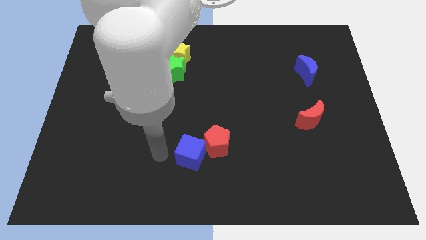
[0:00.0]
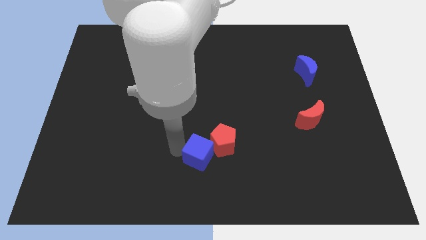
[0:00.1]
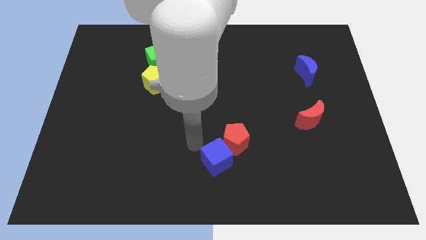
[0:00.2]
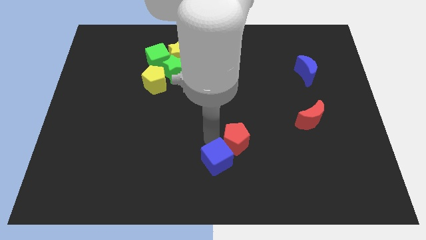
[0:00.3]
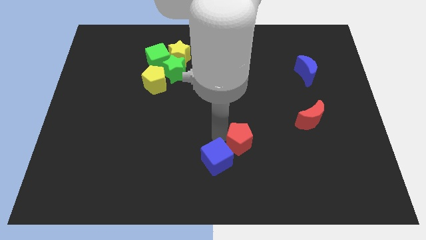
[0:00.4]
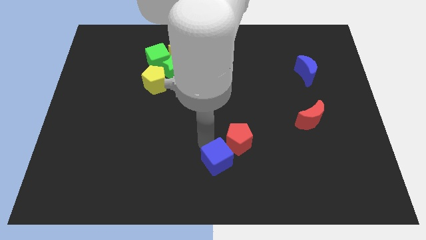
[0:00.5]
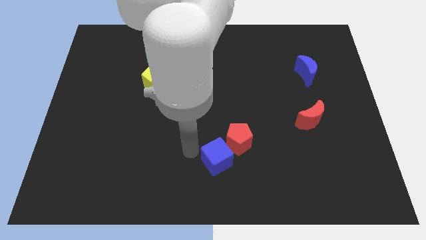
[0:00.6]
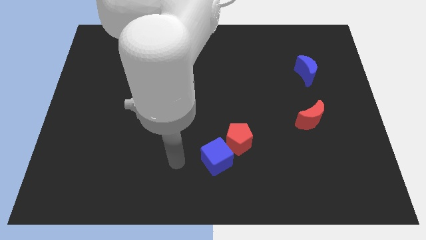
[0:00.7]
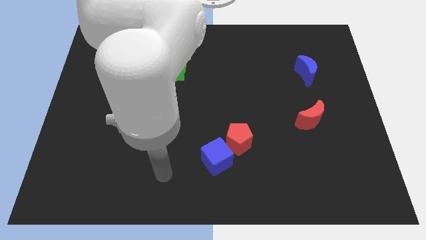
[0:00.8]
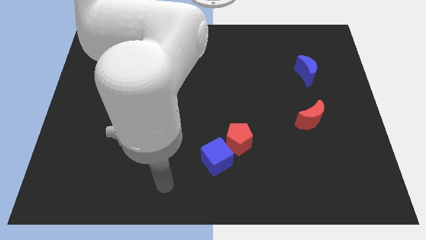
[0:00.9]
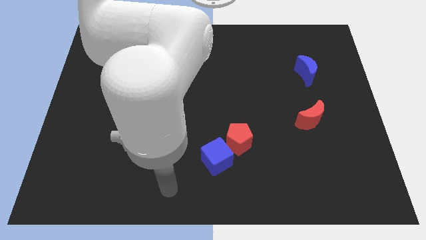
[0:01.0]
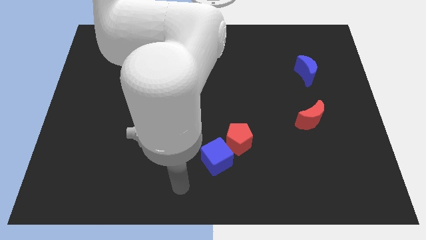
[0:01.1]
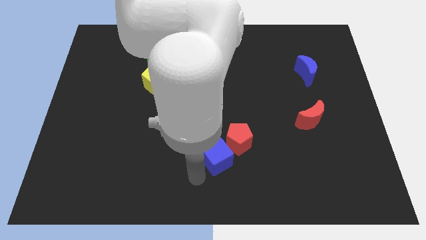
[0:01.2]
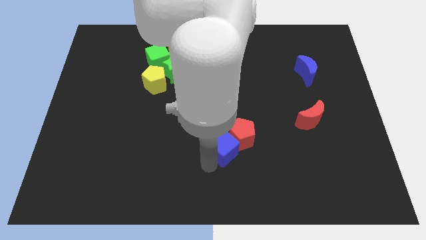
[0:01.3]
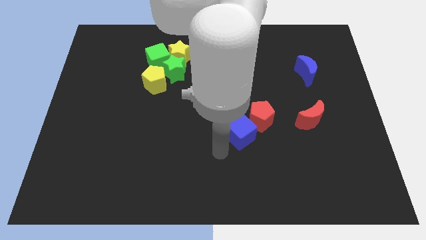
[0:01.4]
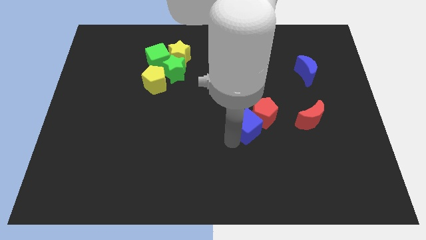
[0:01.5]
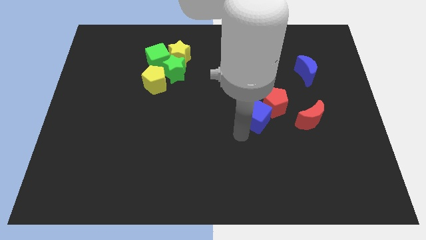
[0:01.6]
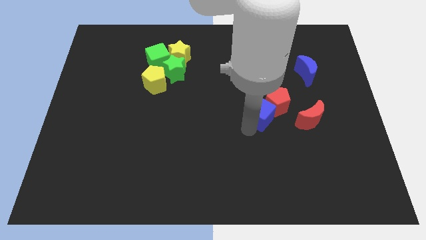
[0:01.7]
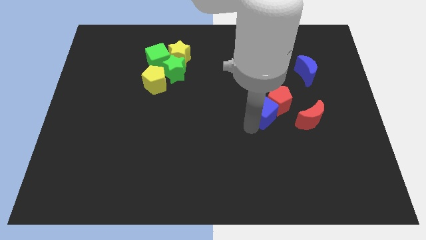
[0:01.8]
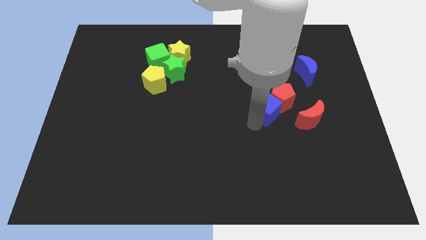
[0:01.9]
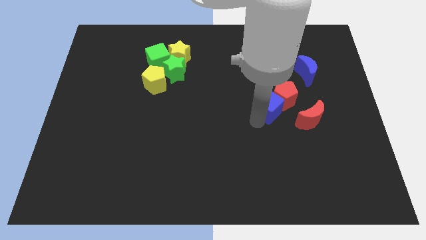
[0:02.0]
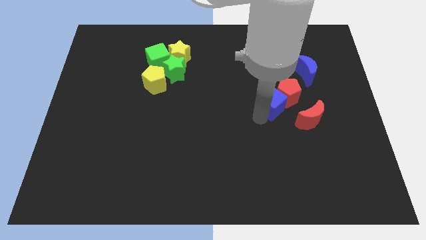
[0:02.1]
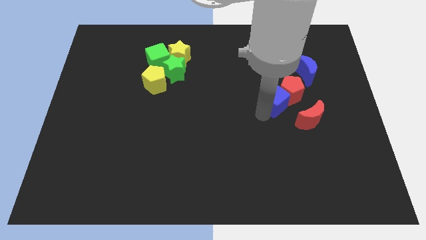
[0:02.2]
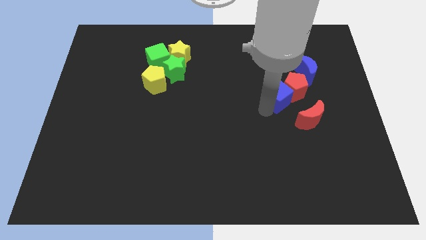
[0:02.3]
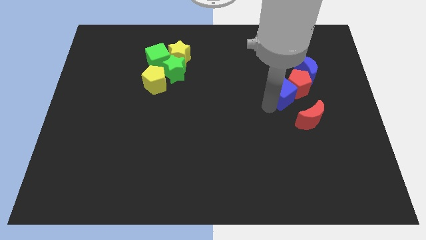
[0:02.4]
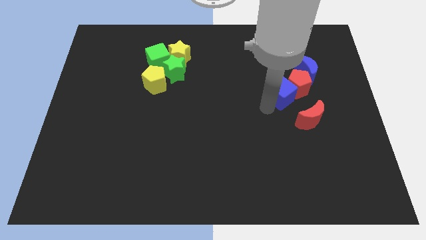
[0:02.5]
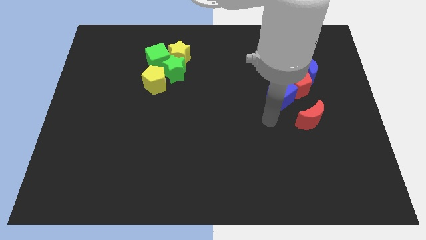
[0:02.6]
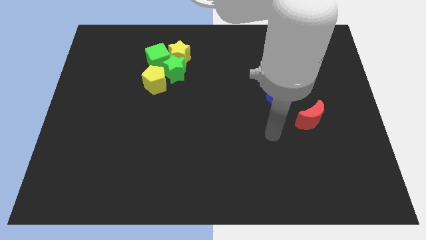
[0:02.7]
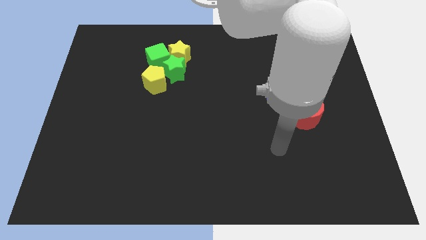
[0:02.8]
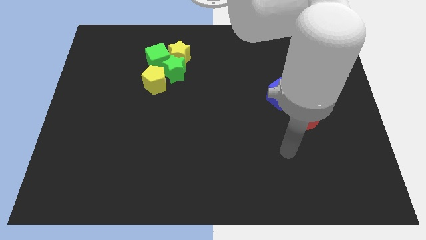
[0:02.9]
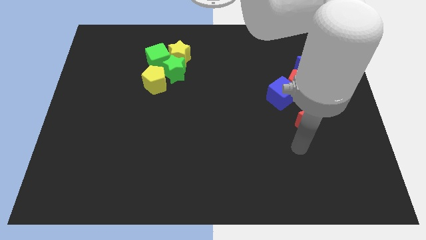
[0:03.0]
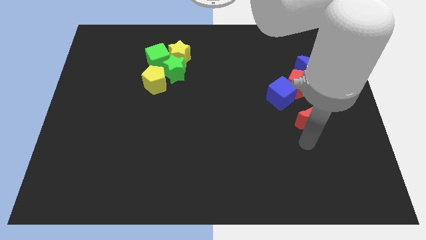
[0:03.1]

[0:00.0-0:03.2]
place the blue cube to the top right

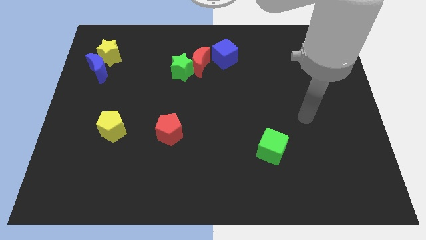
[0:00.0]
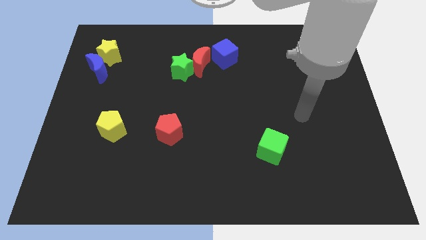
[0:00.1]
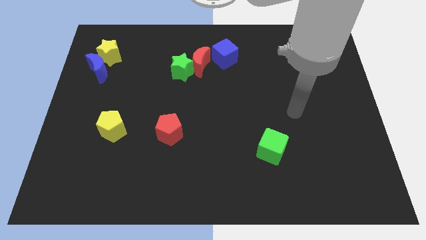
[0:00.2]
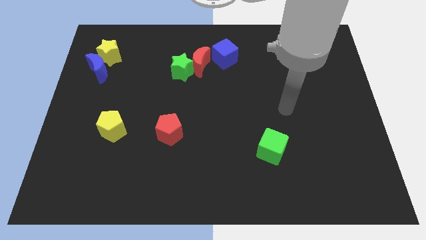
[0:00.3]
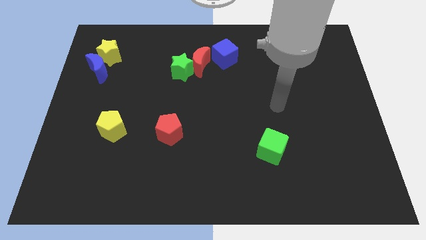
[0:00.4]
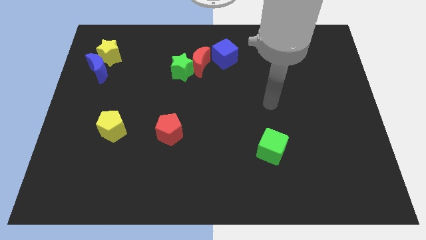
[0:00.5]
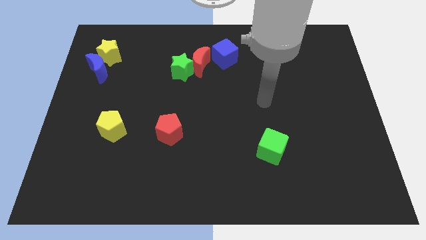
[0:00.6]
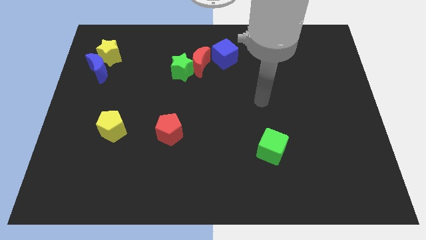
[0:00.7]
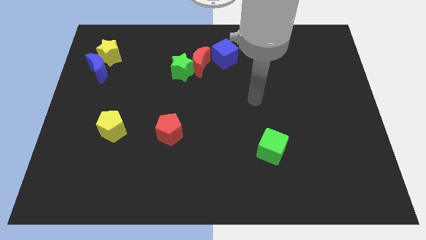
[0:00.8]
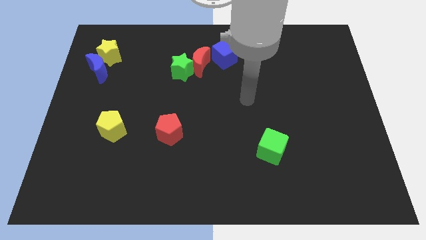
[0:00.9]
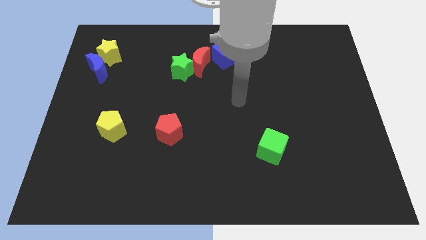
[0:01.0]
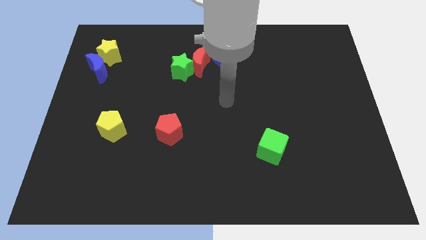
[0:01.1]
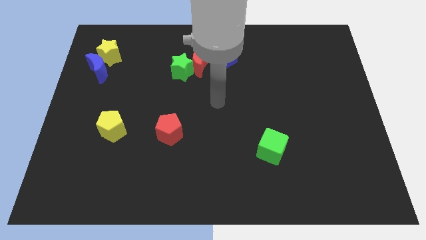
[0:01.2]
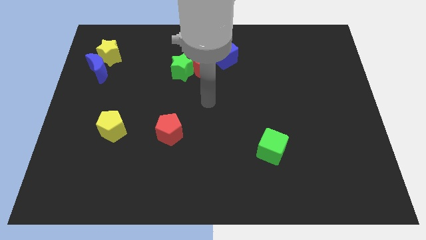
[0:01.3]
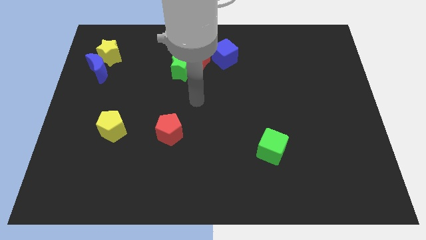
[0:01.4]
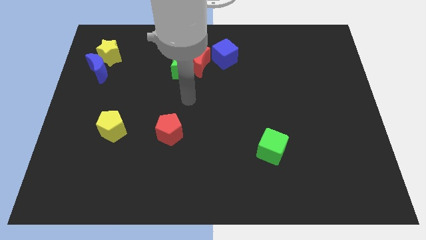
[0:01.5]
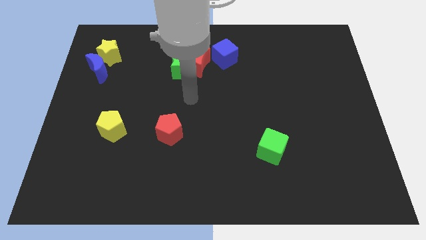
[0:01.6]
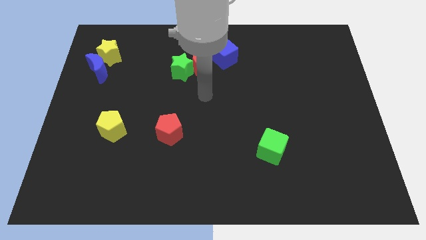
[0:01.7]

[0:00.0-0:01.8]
place your arm at the center of the board

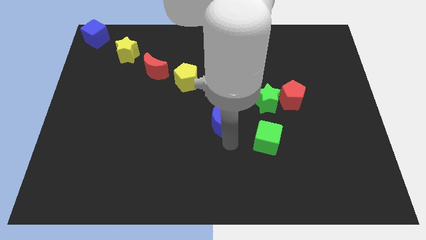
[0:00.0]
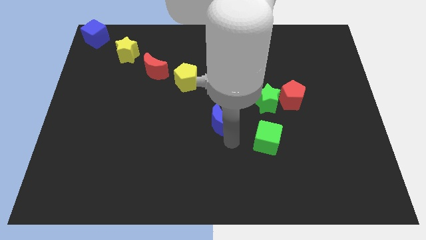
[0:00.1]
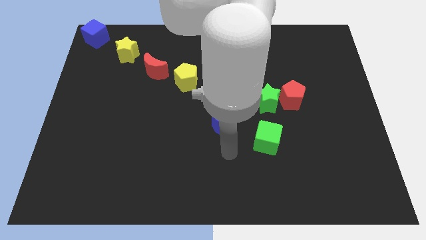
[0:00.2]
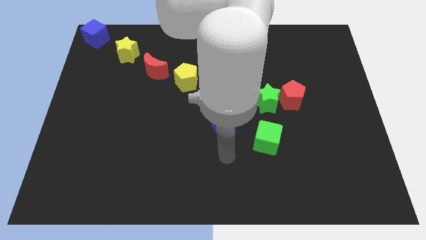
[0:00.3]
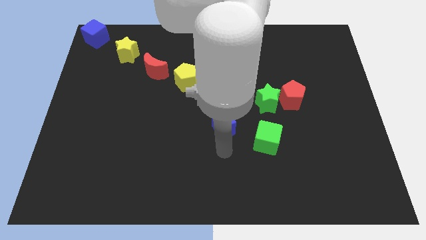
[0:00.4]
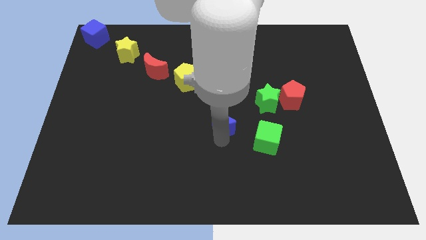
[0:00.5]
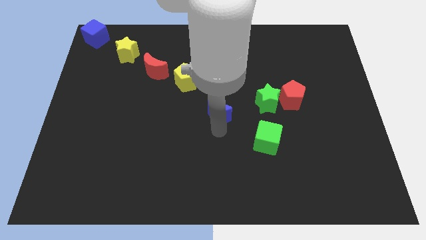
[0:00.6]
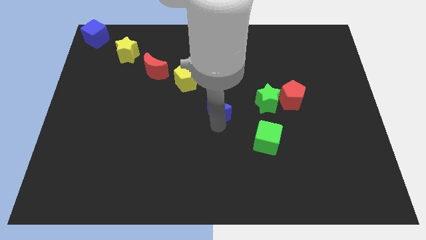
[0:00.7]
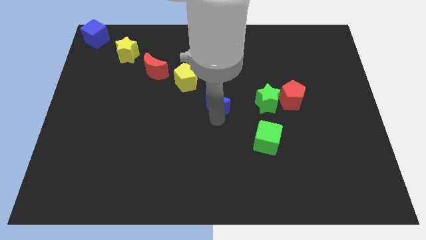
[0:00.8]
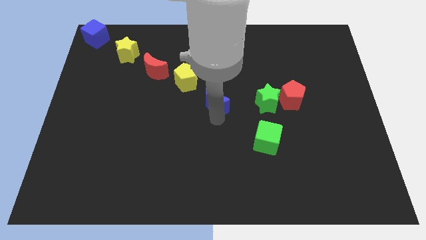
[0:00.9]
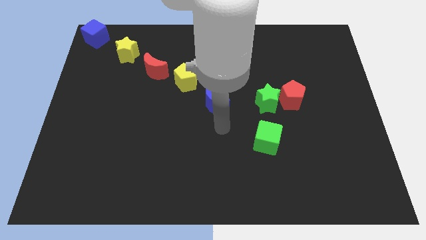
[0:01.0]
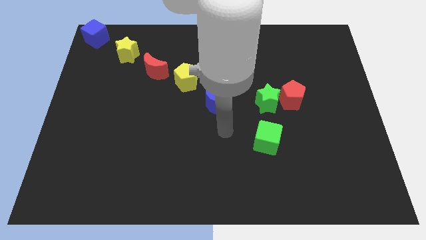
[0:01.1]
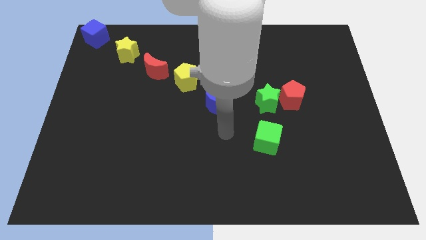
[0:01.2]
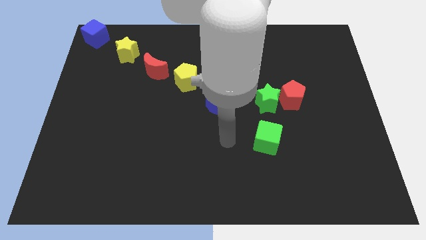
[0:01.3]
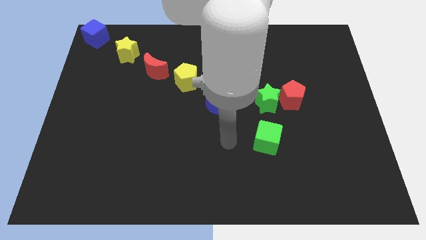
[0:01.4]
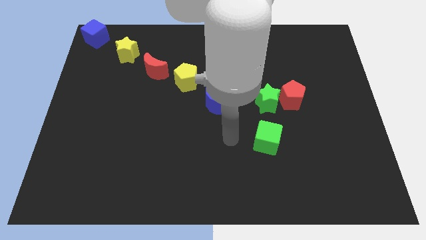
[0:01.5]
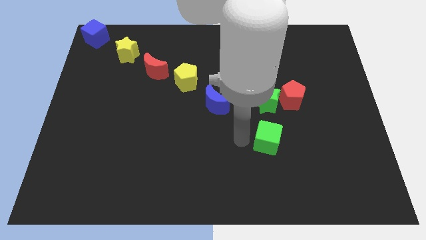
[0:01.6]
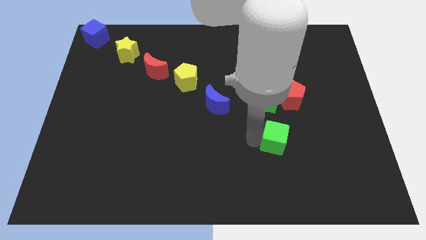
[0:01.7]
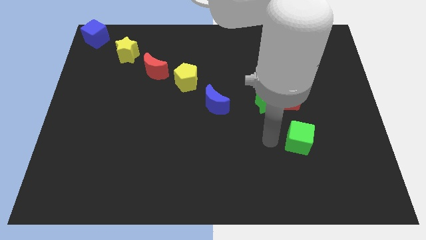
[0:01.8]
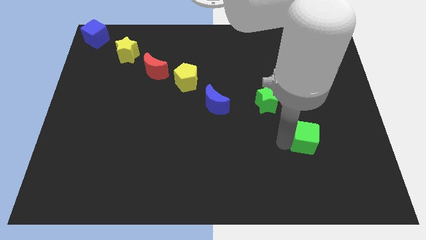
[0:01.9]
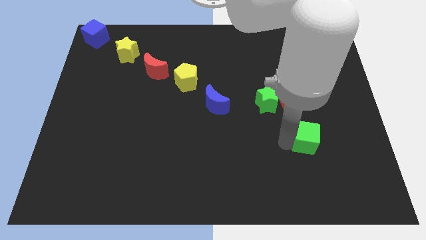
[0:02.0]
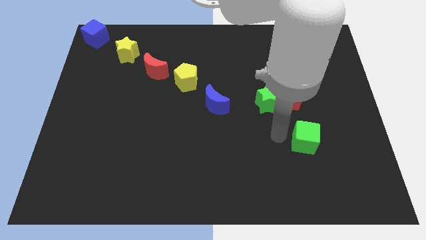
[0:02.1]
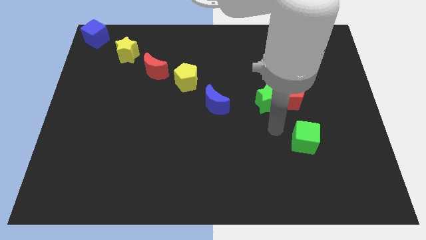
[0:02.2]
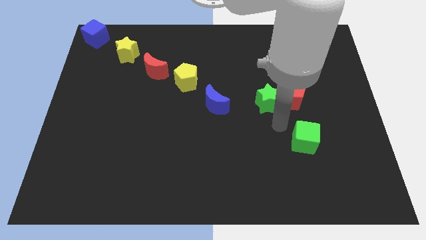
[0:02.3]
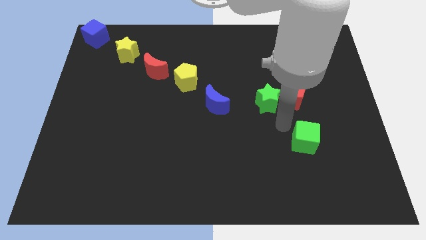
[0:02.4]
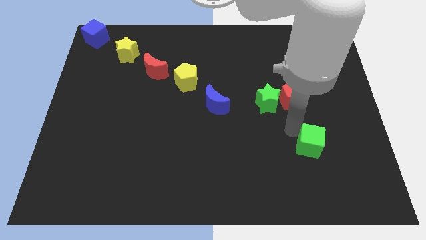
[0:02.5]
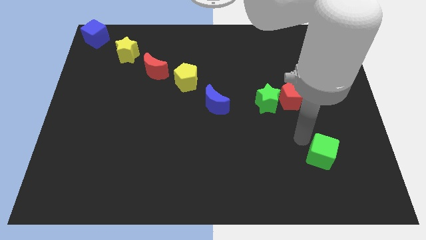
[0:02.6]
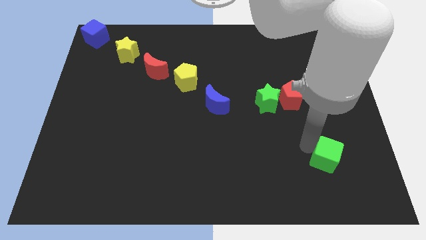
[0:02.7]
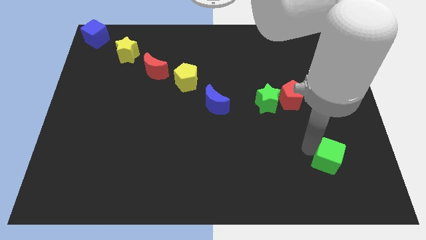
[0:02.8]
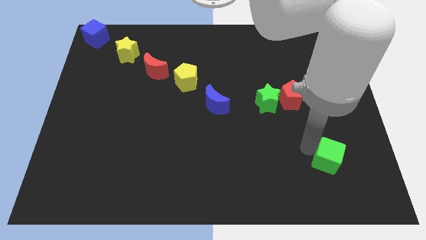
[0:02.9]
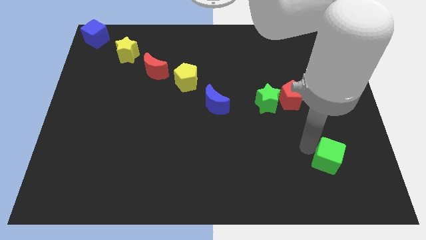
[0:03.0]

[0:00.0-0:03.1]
move green cube towards the right bottom of the board

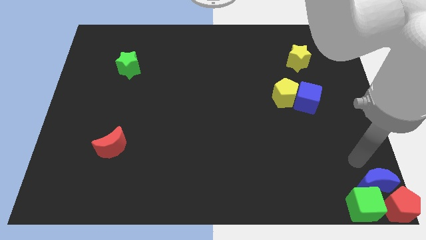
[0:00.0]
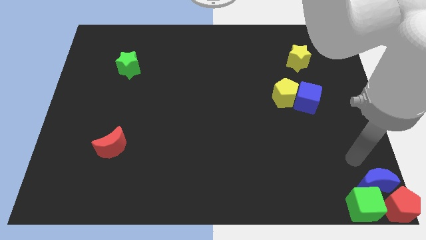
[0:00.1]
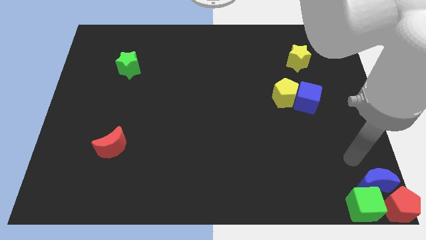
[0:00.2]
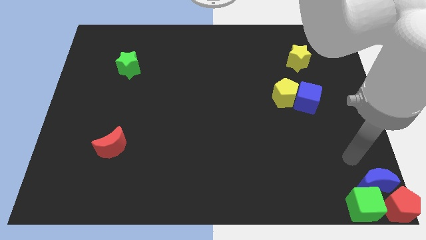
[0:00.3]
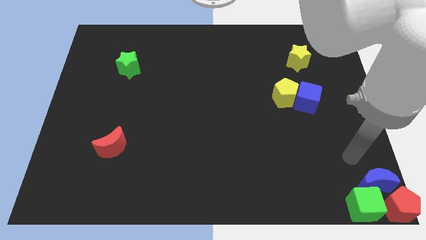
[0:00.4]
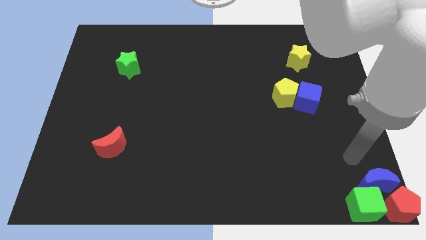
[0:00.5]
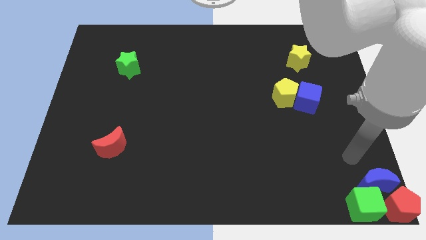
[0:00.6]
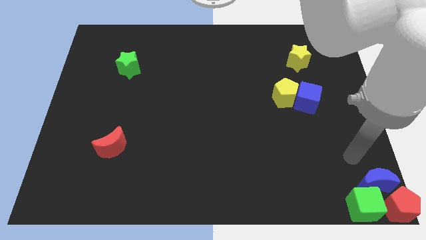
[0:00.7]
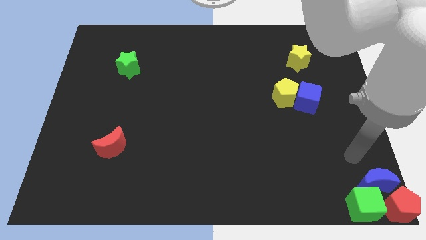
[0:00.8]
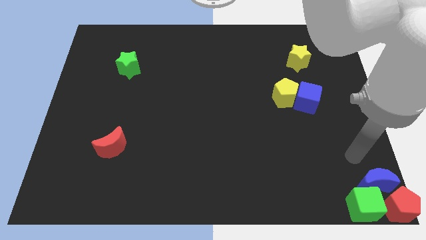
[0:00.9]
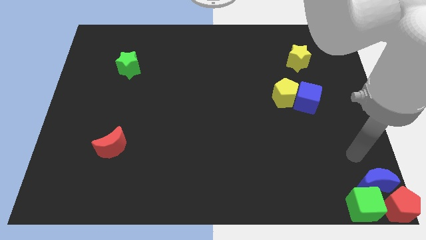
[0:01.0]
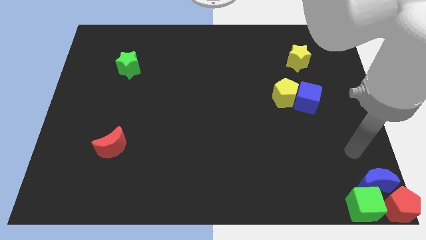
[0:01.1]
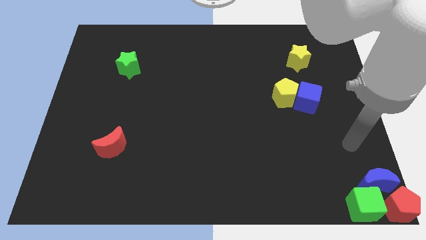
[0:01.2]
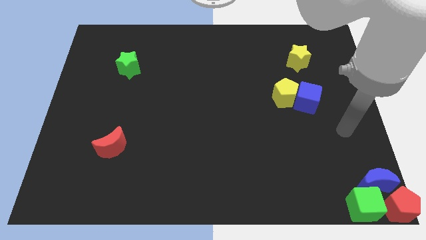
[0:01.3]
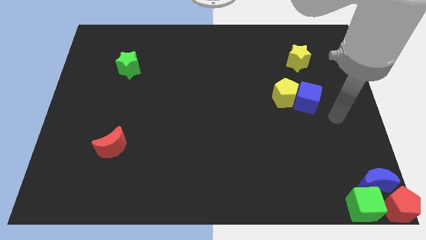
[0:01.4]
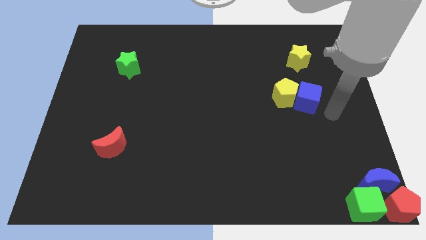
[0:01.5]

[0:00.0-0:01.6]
place the arm to the right of the blue cube
